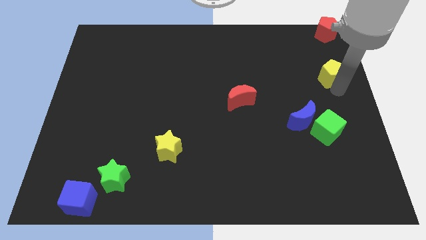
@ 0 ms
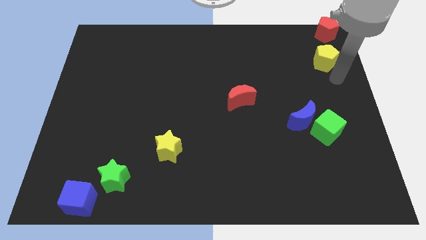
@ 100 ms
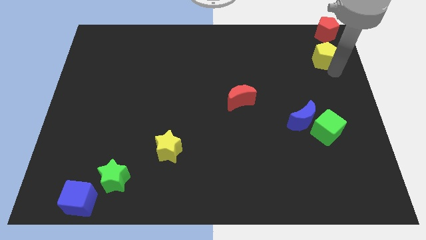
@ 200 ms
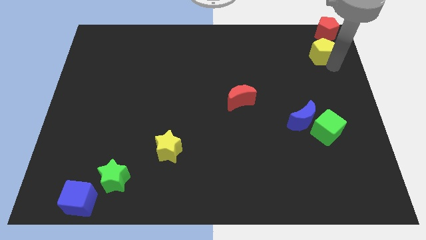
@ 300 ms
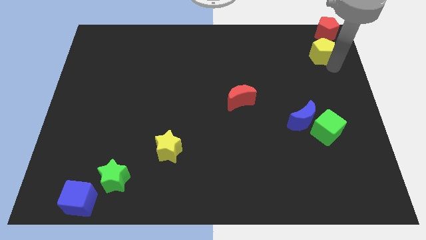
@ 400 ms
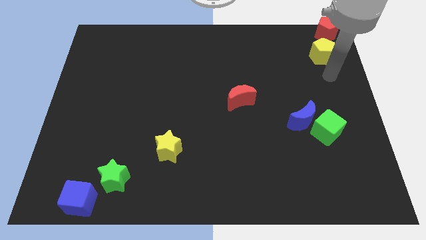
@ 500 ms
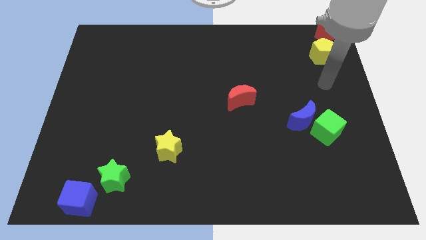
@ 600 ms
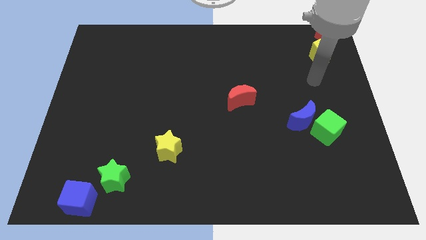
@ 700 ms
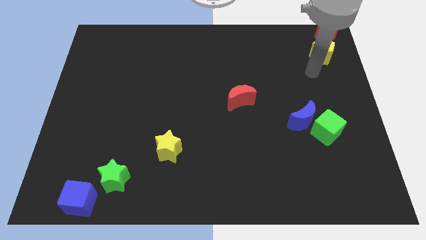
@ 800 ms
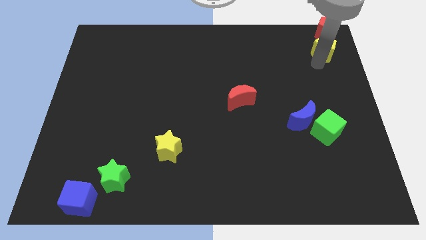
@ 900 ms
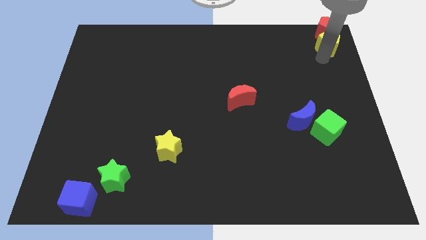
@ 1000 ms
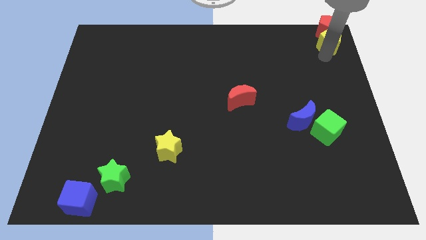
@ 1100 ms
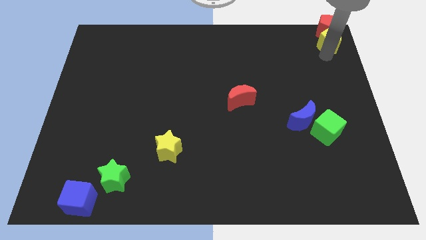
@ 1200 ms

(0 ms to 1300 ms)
push the yellow pentagon towards the red pentagon

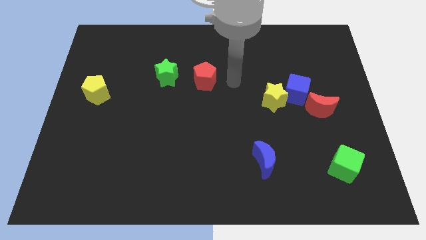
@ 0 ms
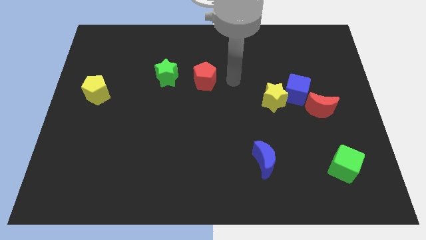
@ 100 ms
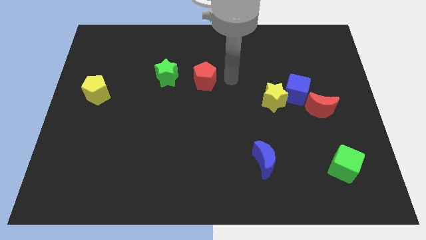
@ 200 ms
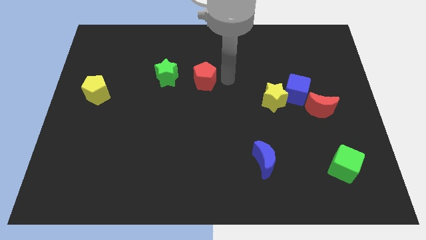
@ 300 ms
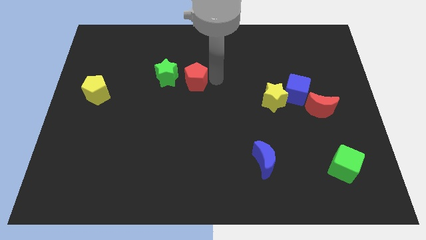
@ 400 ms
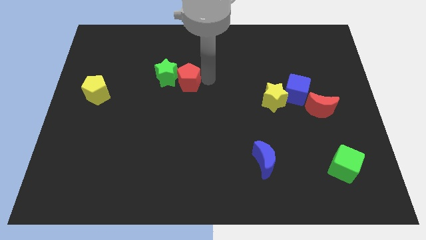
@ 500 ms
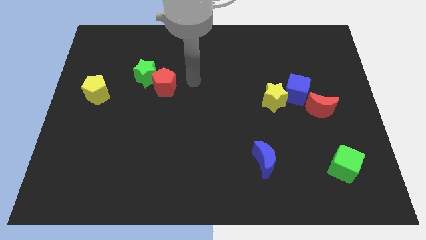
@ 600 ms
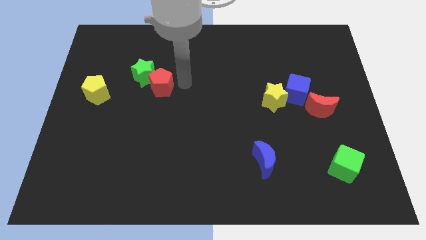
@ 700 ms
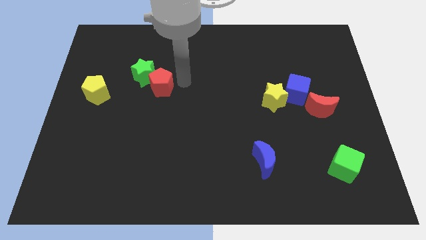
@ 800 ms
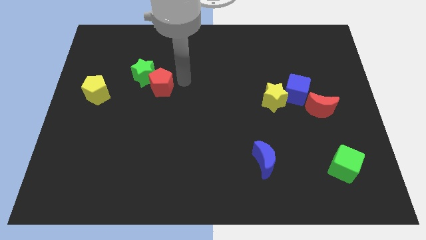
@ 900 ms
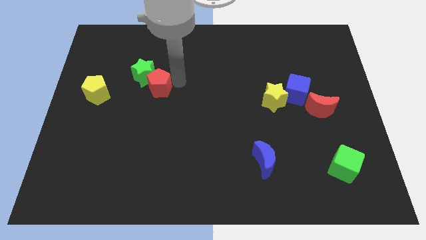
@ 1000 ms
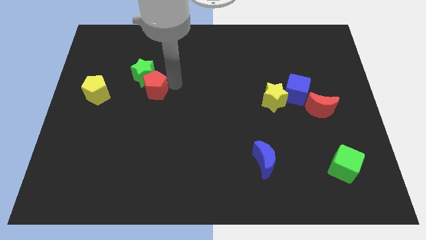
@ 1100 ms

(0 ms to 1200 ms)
push the red pentagon into the green star

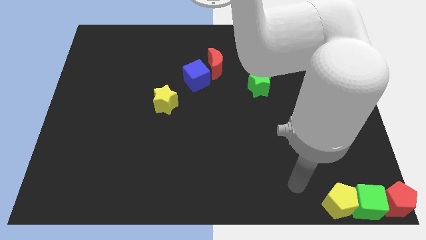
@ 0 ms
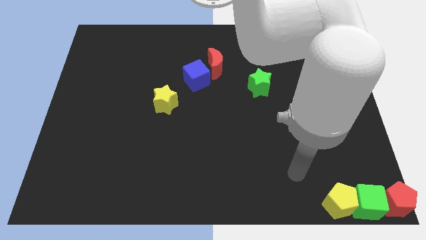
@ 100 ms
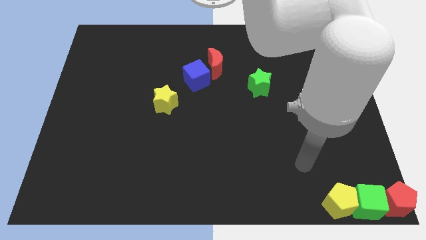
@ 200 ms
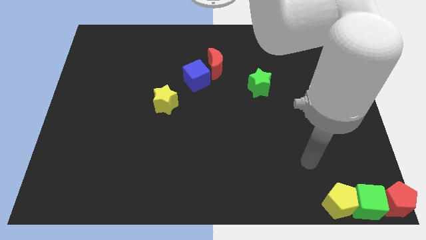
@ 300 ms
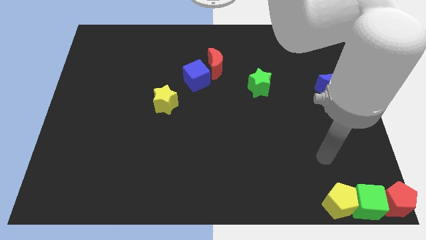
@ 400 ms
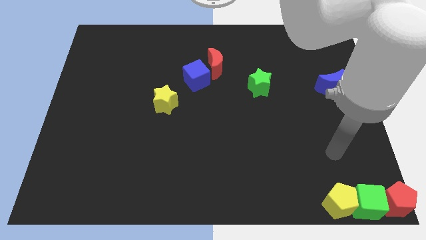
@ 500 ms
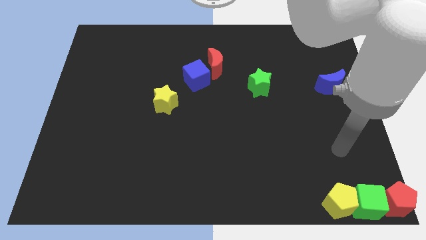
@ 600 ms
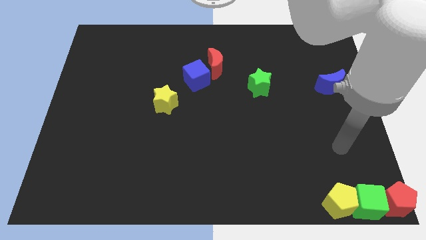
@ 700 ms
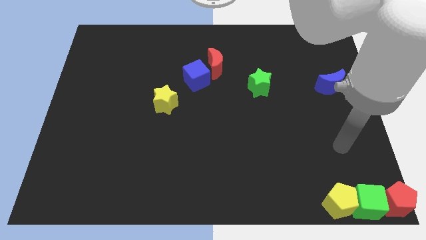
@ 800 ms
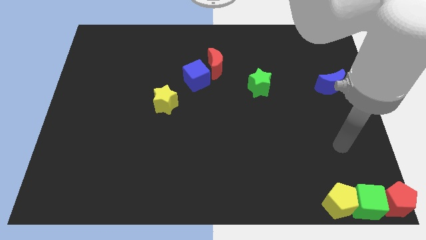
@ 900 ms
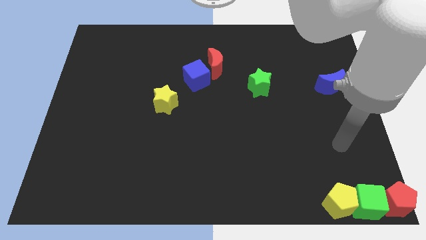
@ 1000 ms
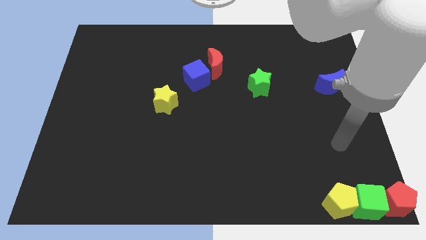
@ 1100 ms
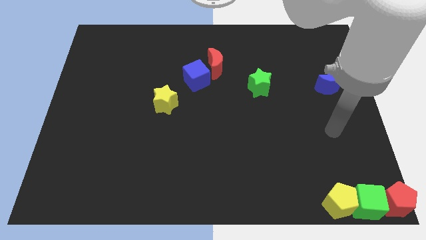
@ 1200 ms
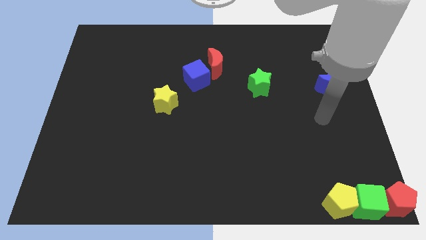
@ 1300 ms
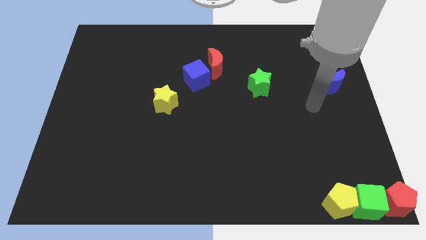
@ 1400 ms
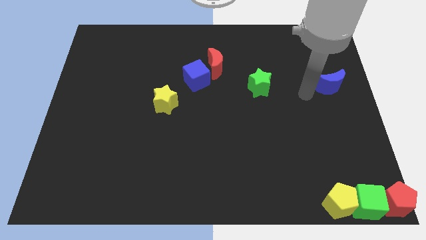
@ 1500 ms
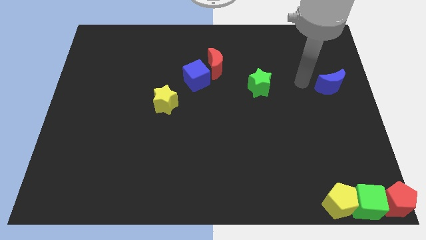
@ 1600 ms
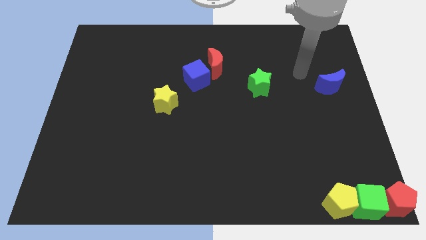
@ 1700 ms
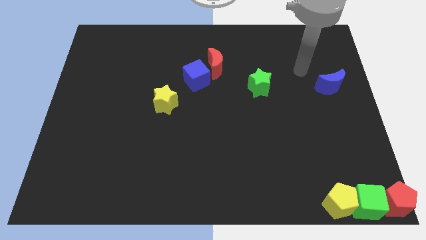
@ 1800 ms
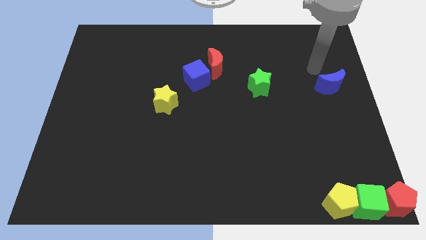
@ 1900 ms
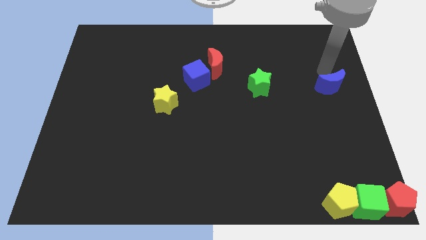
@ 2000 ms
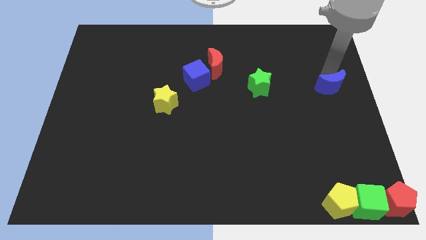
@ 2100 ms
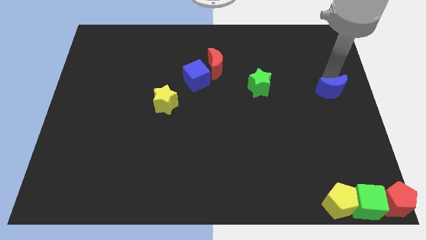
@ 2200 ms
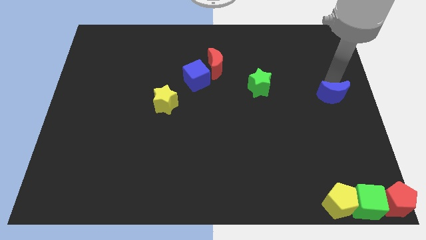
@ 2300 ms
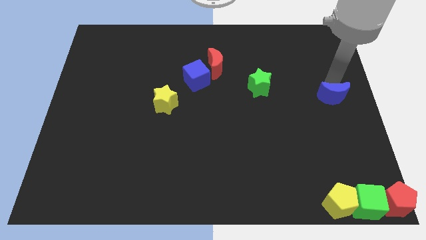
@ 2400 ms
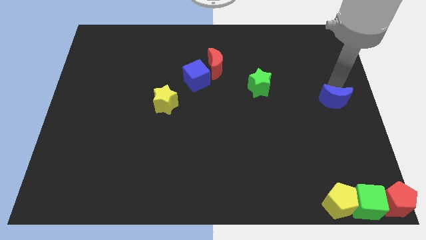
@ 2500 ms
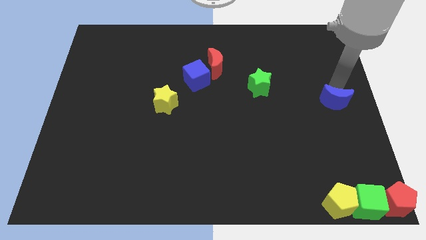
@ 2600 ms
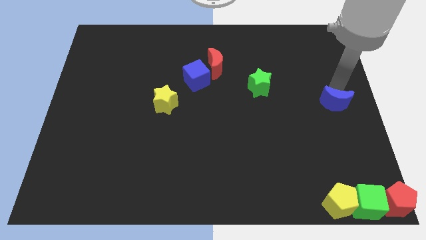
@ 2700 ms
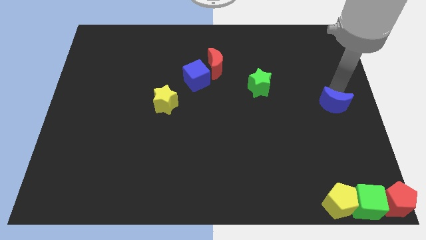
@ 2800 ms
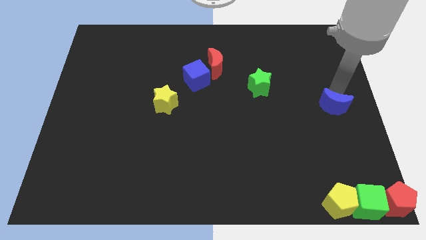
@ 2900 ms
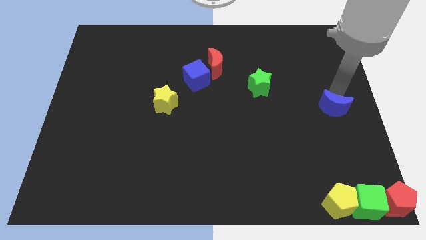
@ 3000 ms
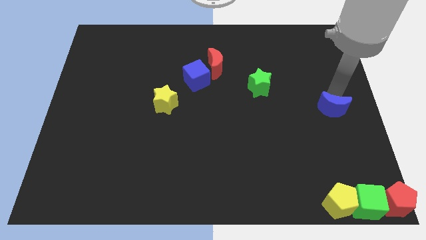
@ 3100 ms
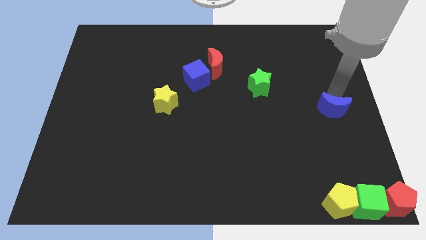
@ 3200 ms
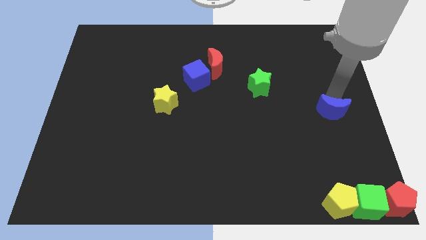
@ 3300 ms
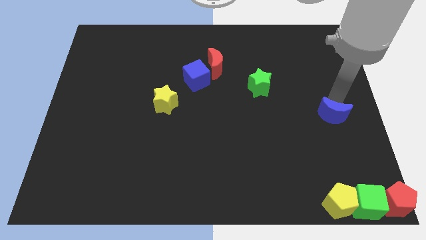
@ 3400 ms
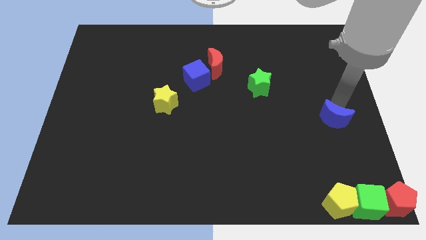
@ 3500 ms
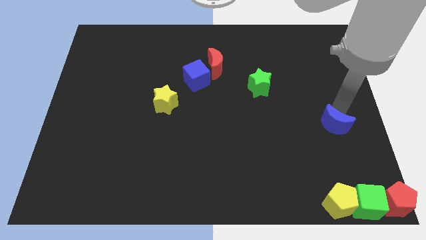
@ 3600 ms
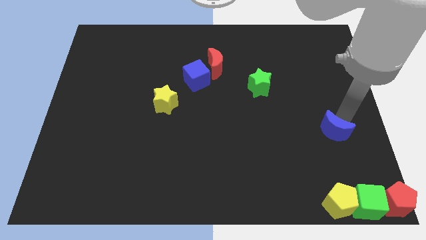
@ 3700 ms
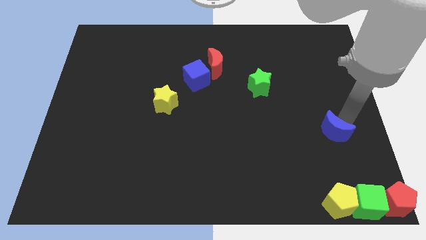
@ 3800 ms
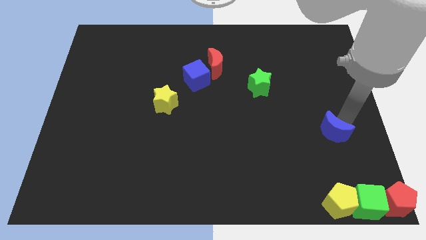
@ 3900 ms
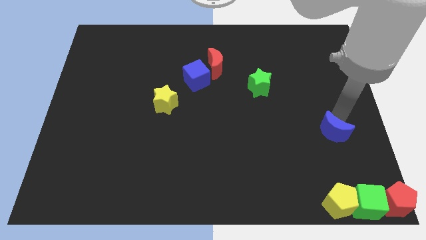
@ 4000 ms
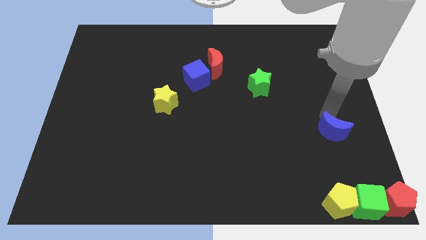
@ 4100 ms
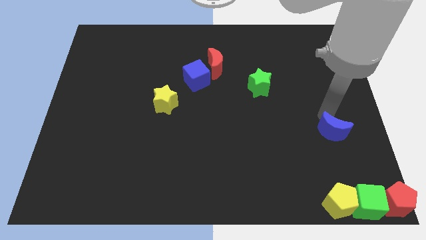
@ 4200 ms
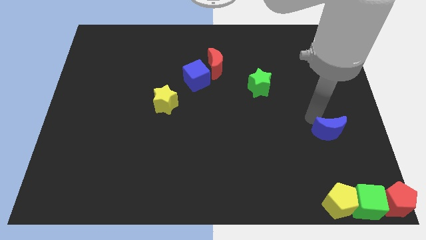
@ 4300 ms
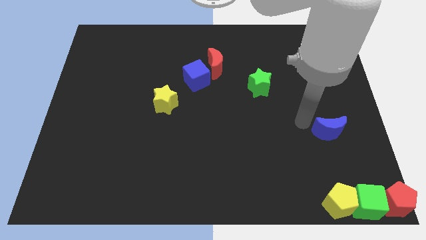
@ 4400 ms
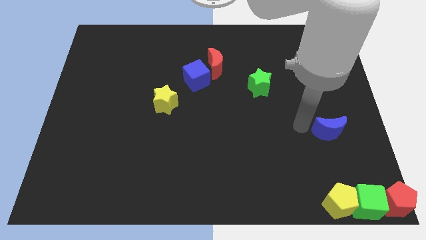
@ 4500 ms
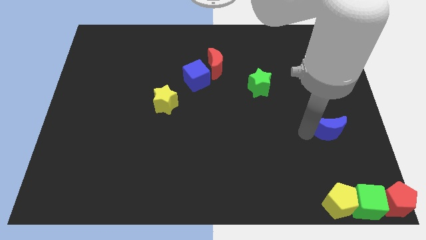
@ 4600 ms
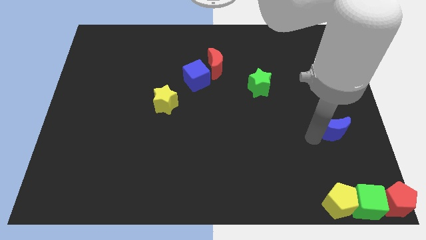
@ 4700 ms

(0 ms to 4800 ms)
place the blue moon at the top of the yellow pentgaon

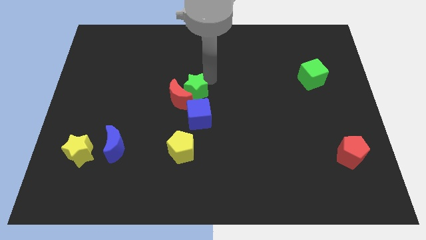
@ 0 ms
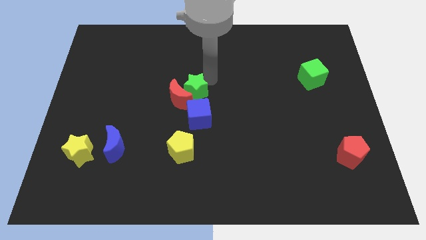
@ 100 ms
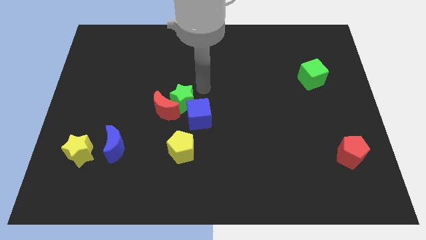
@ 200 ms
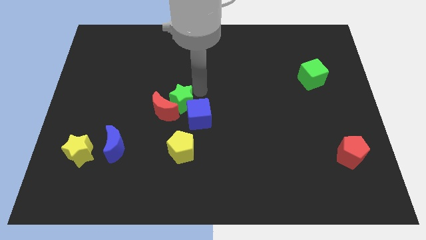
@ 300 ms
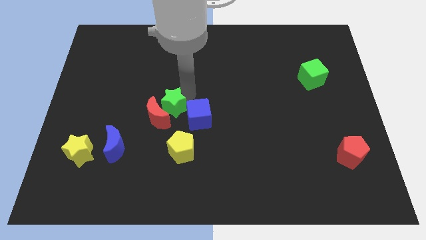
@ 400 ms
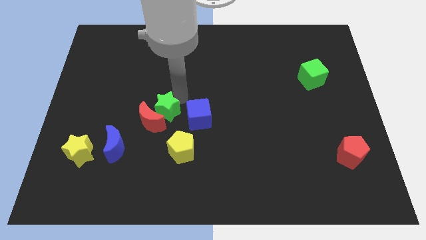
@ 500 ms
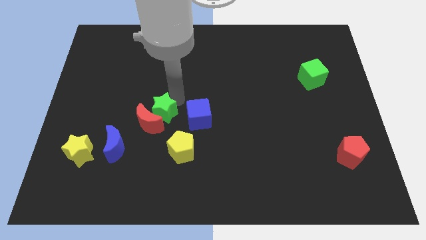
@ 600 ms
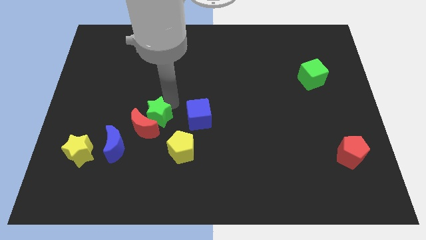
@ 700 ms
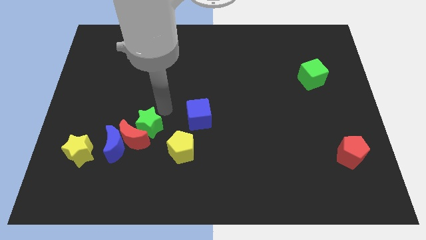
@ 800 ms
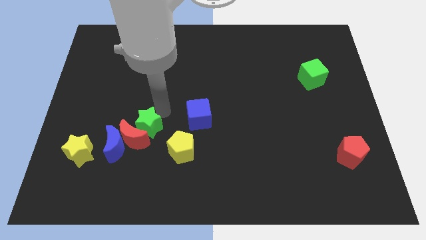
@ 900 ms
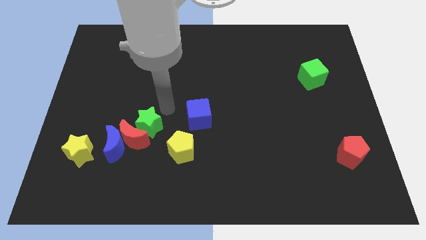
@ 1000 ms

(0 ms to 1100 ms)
slide green star along with red moon into blue moon

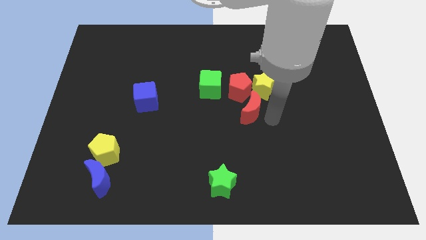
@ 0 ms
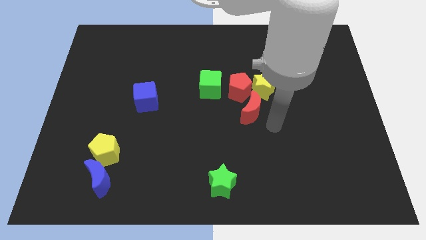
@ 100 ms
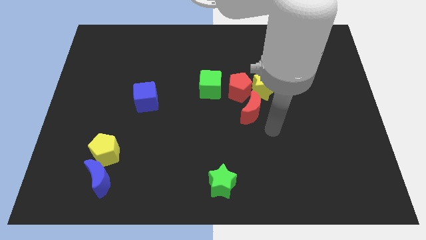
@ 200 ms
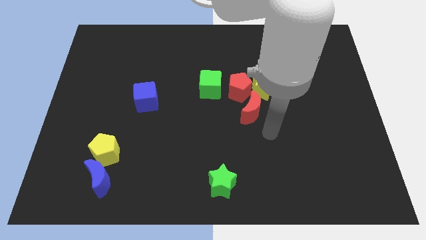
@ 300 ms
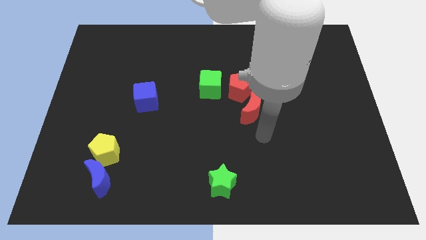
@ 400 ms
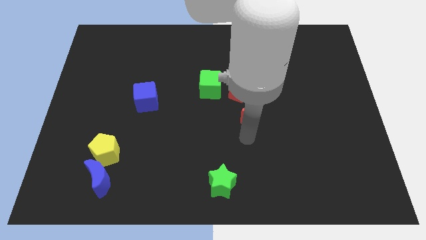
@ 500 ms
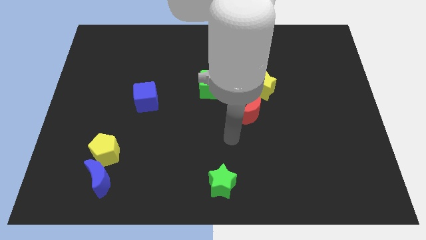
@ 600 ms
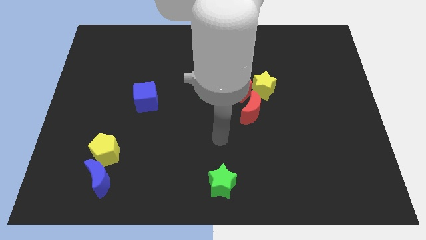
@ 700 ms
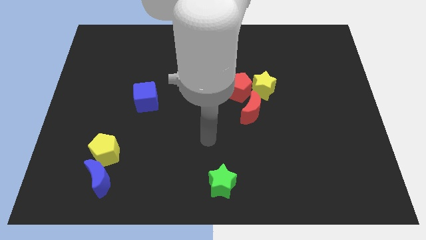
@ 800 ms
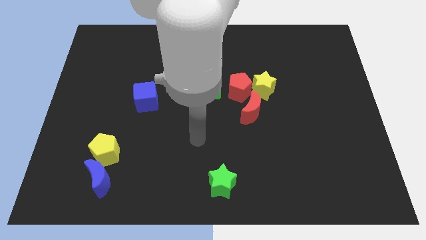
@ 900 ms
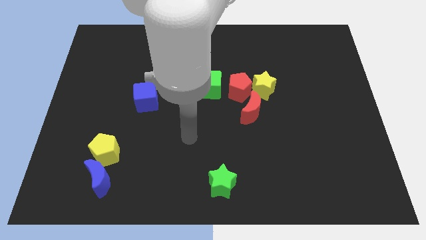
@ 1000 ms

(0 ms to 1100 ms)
move your arm towards the left side of the board
